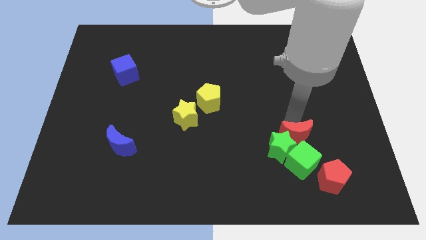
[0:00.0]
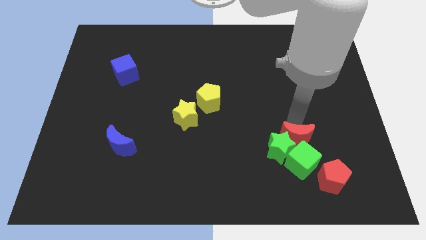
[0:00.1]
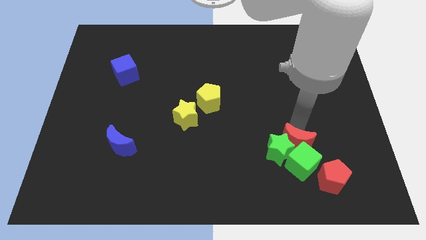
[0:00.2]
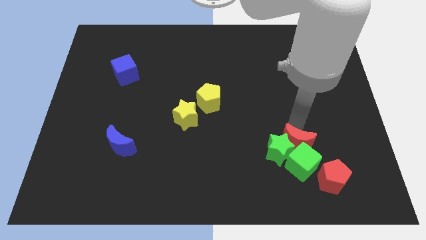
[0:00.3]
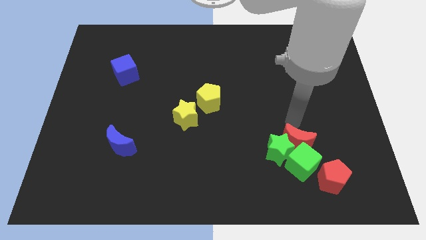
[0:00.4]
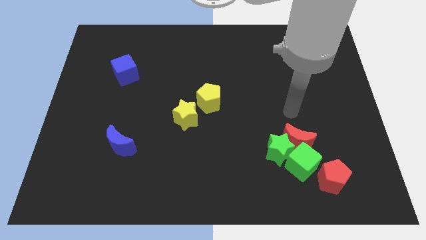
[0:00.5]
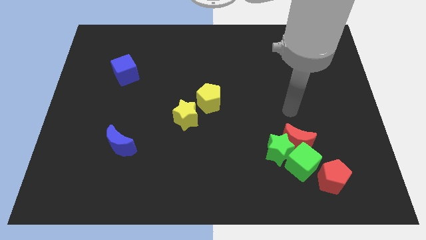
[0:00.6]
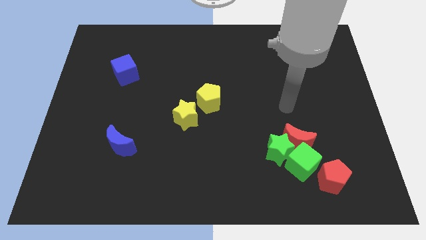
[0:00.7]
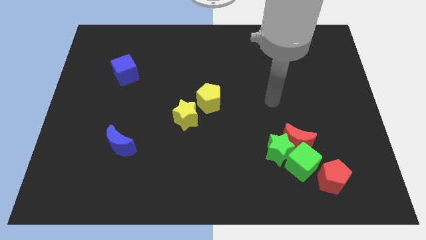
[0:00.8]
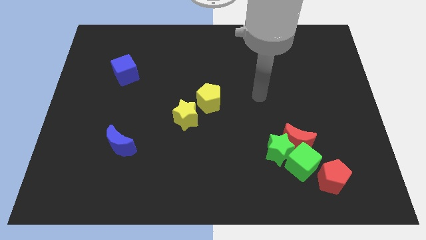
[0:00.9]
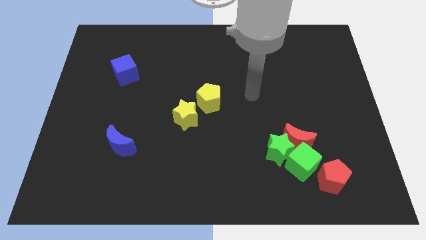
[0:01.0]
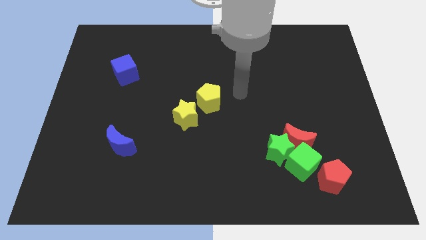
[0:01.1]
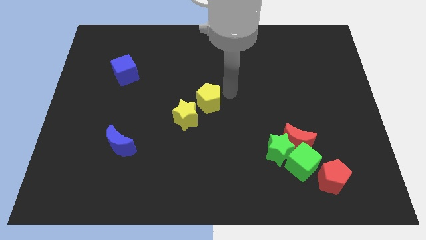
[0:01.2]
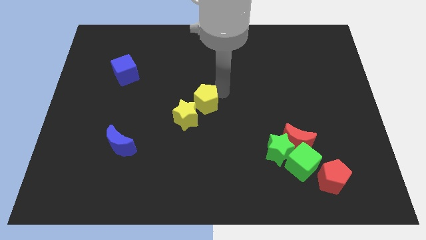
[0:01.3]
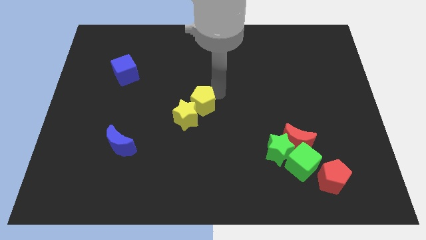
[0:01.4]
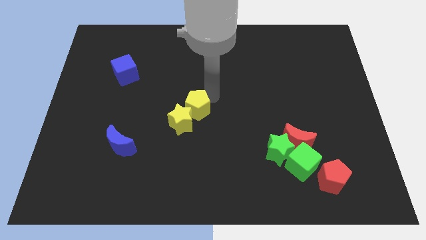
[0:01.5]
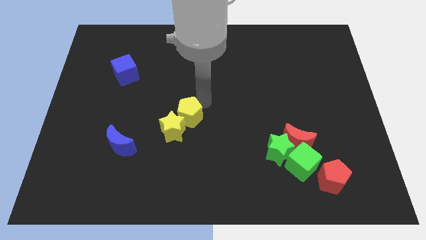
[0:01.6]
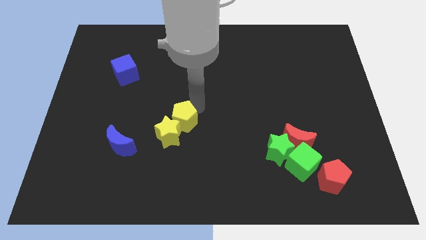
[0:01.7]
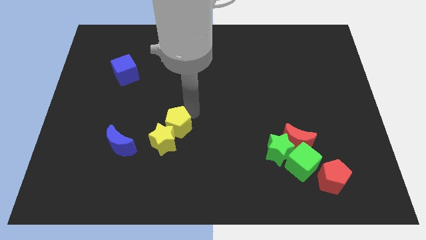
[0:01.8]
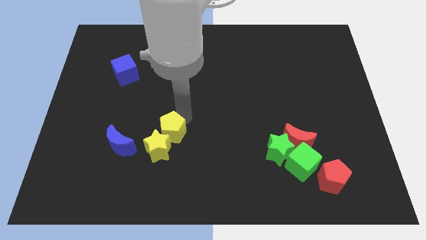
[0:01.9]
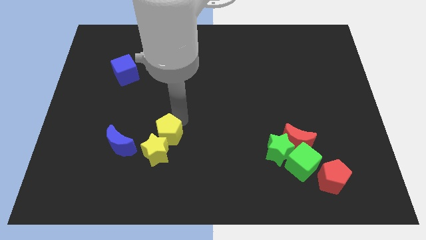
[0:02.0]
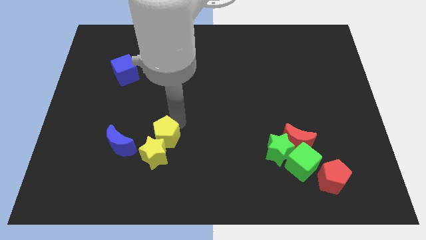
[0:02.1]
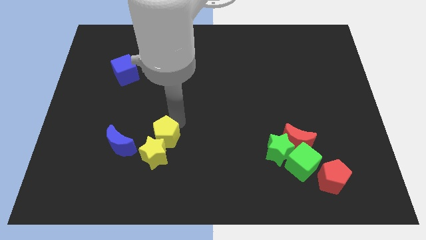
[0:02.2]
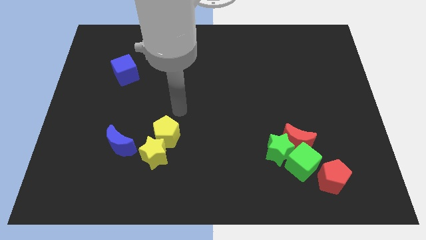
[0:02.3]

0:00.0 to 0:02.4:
move yellow pentagon along with yellow star to the right side of the blue crescent

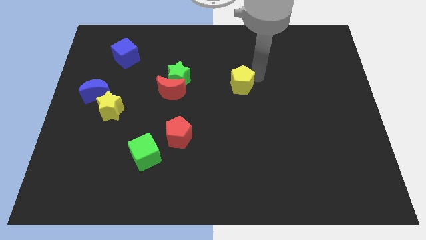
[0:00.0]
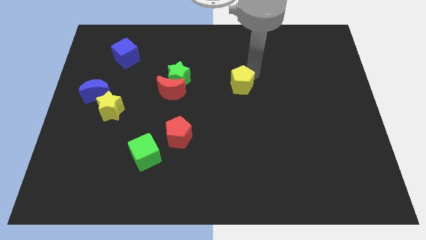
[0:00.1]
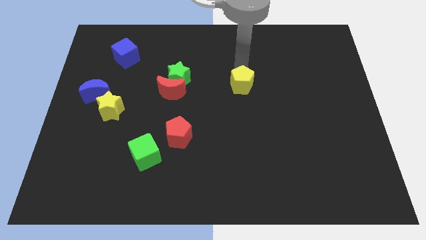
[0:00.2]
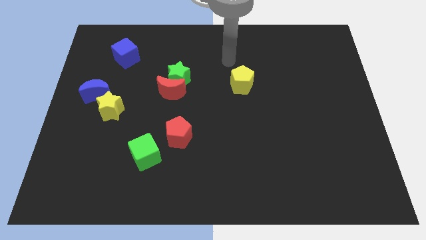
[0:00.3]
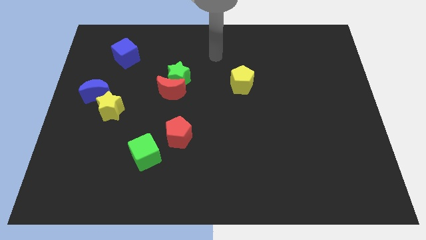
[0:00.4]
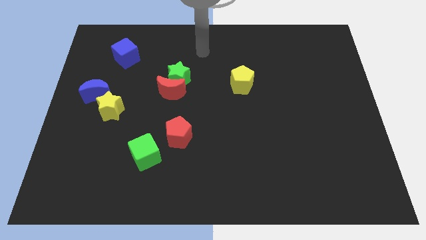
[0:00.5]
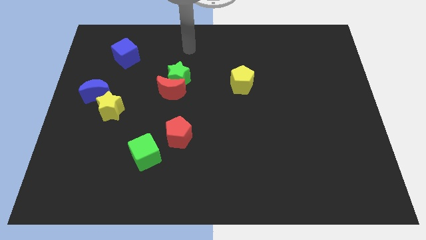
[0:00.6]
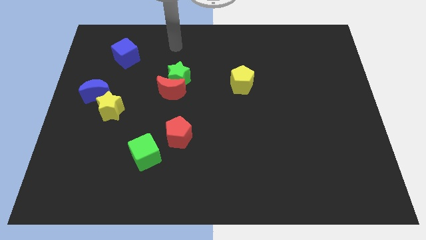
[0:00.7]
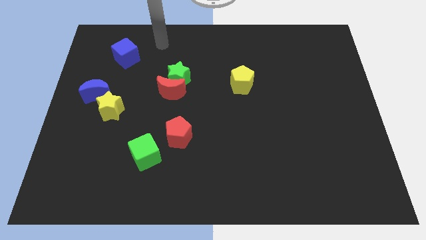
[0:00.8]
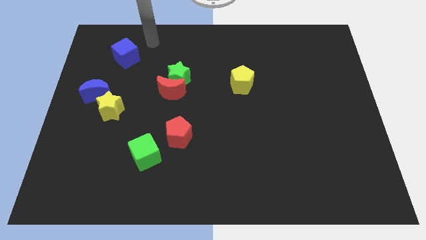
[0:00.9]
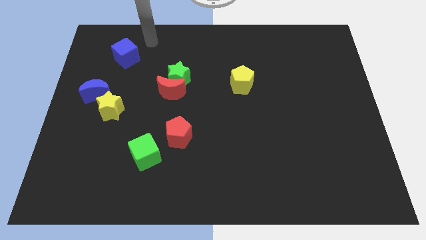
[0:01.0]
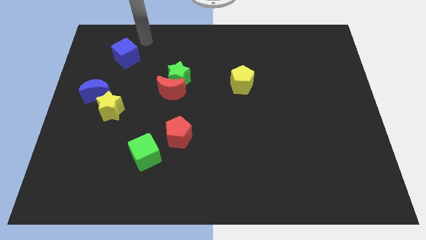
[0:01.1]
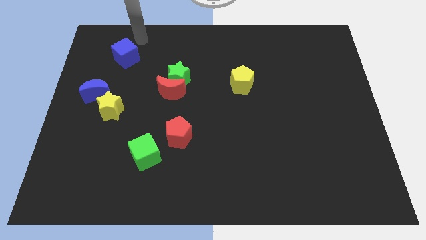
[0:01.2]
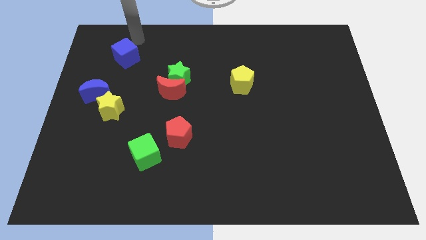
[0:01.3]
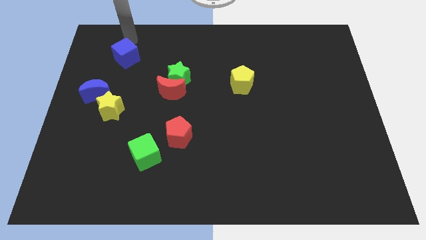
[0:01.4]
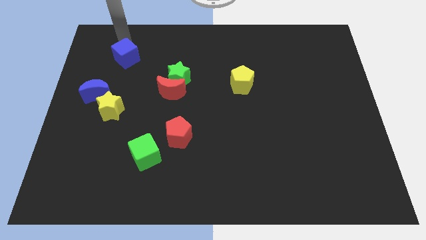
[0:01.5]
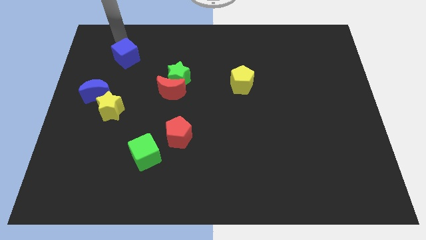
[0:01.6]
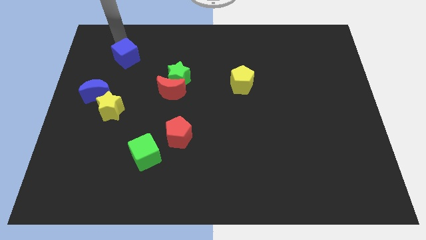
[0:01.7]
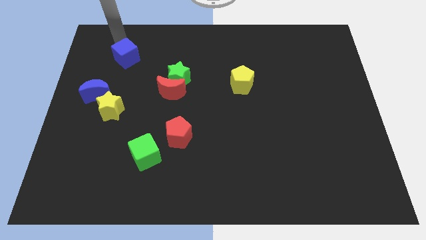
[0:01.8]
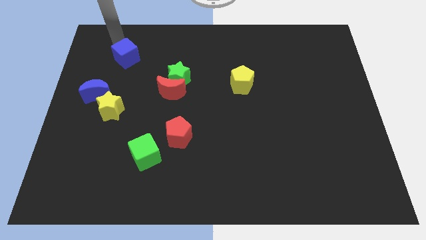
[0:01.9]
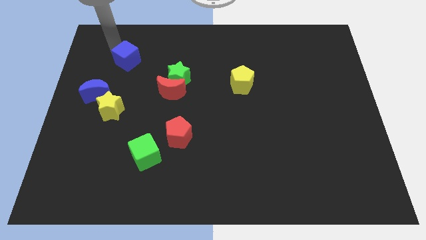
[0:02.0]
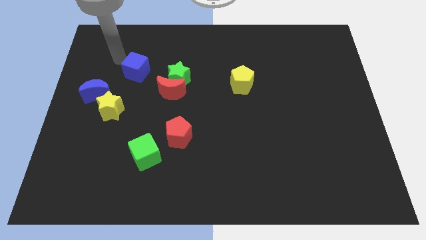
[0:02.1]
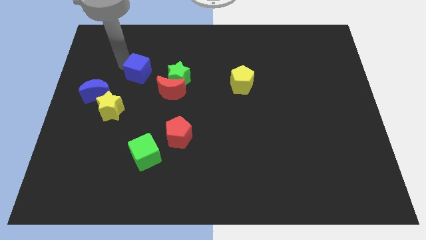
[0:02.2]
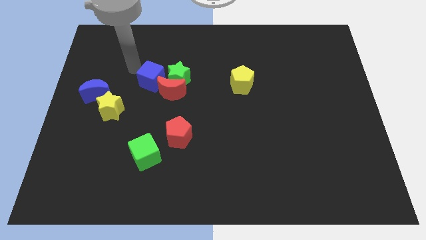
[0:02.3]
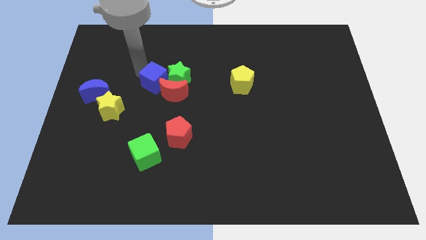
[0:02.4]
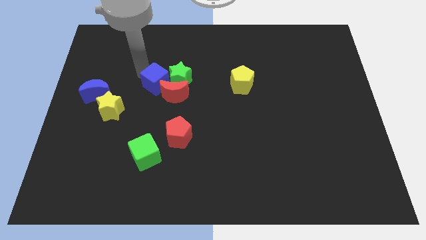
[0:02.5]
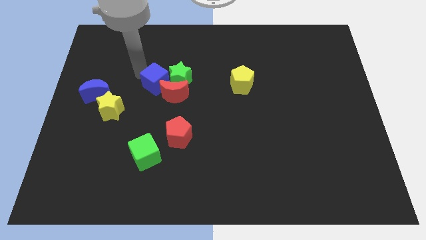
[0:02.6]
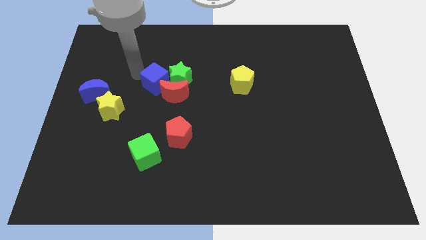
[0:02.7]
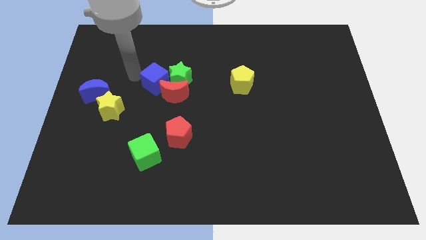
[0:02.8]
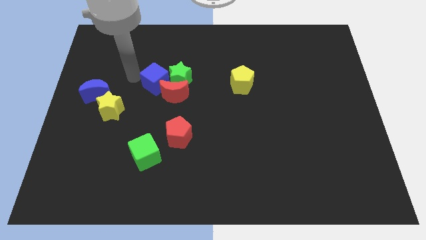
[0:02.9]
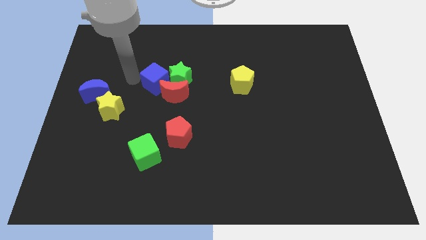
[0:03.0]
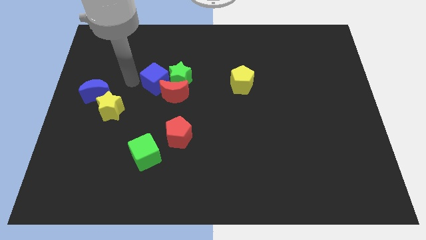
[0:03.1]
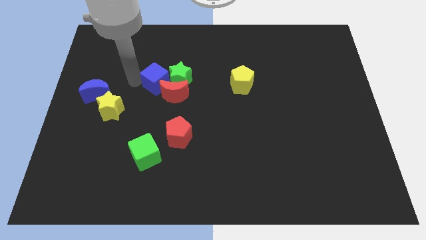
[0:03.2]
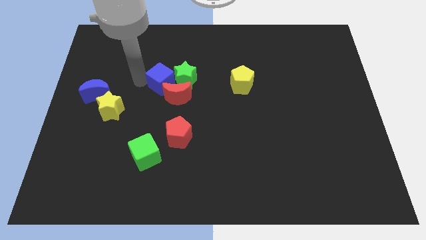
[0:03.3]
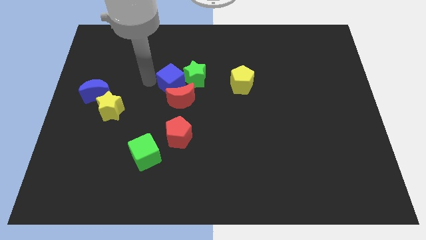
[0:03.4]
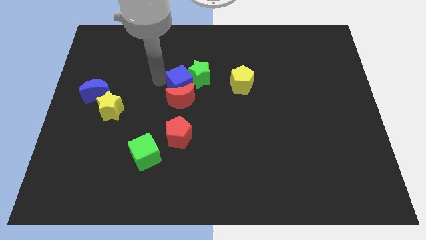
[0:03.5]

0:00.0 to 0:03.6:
place the blue cube above the red moon

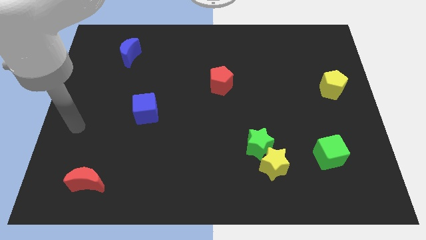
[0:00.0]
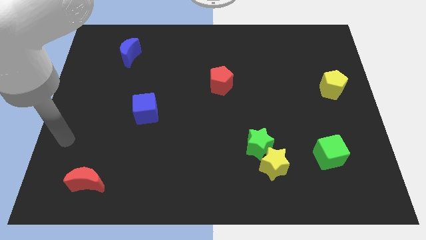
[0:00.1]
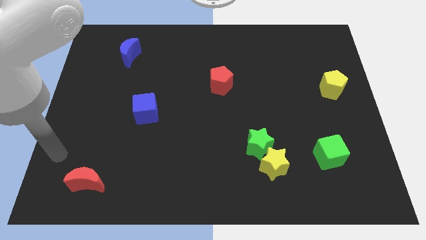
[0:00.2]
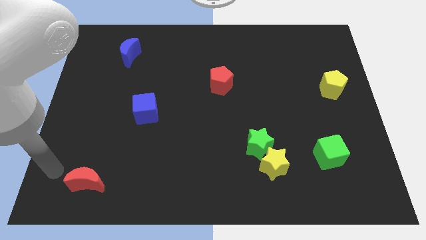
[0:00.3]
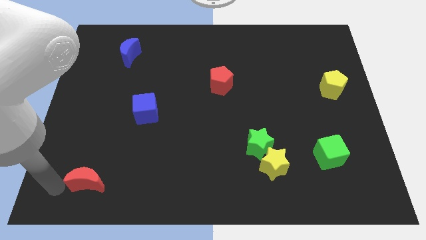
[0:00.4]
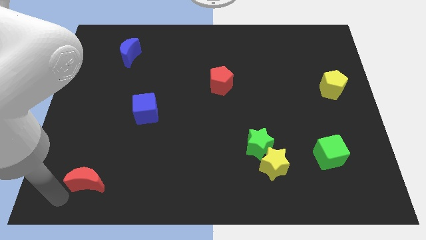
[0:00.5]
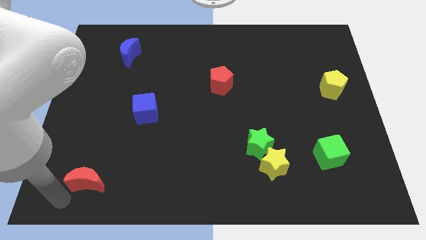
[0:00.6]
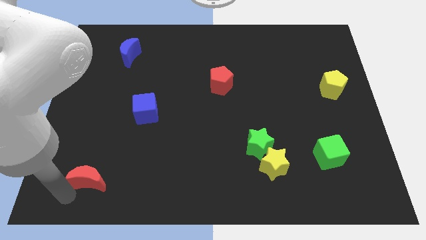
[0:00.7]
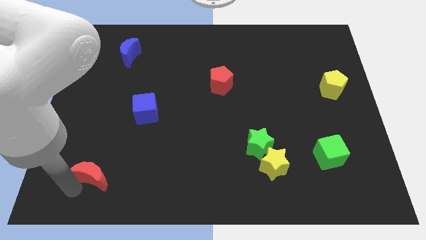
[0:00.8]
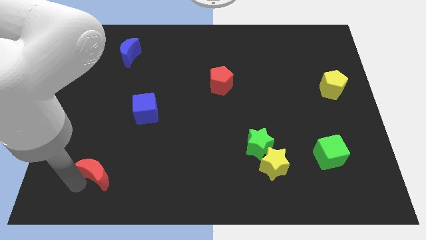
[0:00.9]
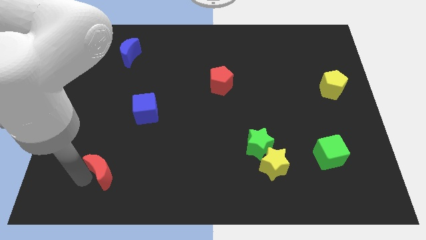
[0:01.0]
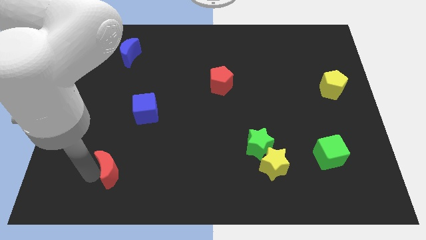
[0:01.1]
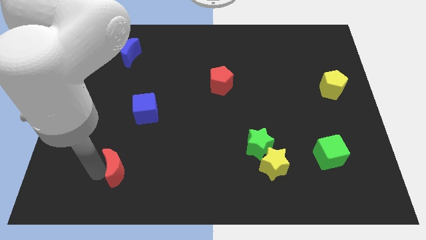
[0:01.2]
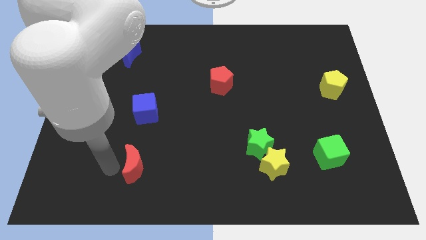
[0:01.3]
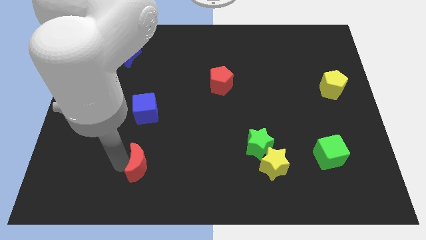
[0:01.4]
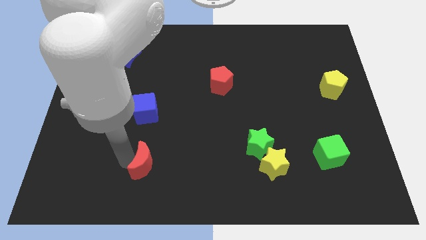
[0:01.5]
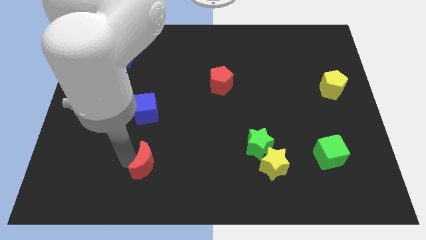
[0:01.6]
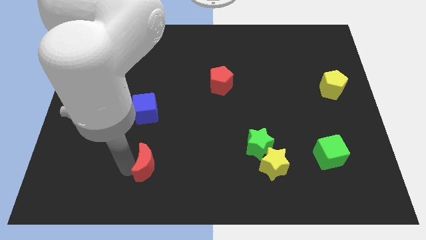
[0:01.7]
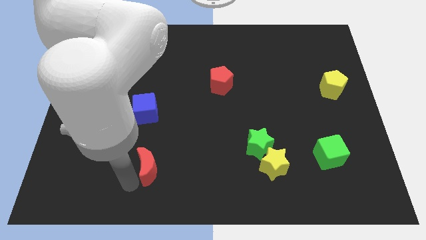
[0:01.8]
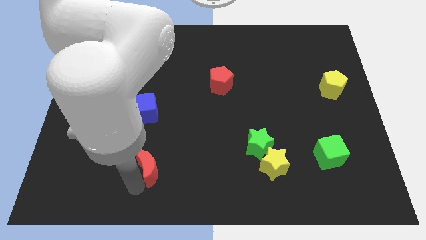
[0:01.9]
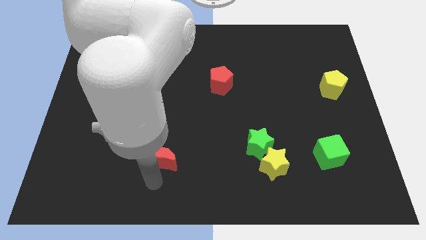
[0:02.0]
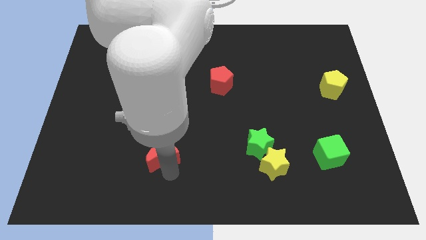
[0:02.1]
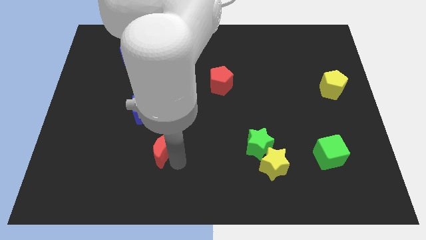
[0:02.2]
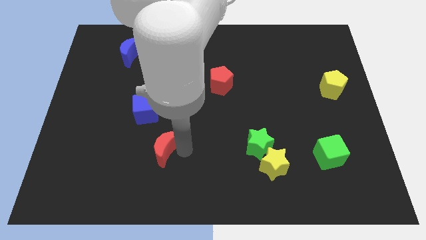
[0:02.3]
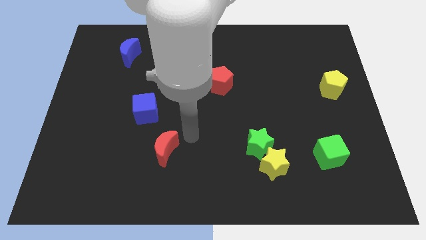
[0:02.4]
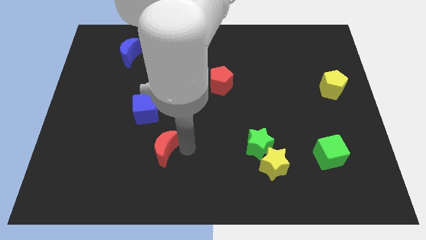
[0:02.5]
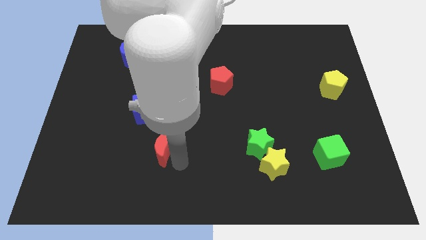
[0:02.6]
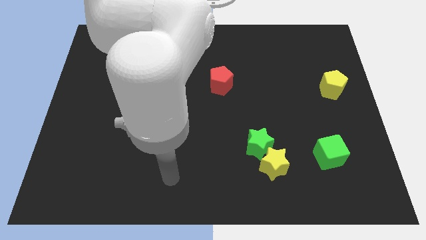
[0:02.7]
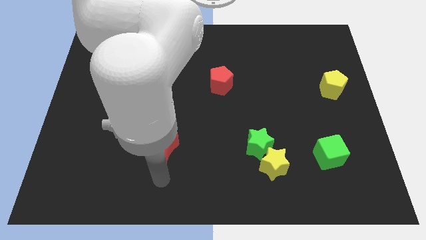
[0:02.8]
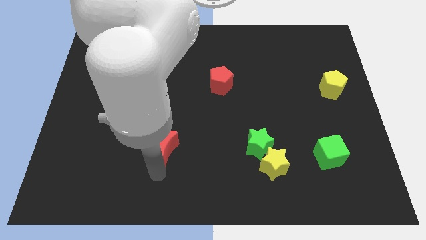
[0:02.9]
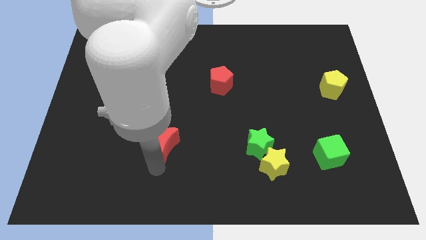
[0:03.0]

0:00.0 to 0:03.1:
move the red moon to the horizontal left side of the green star
